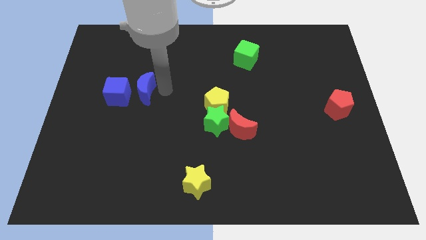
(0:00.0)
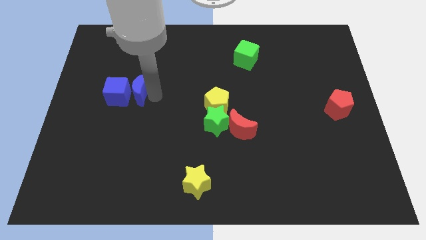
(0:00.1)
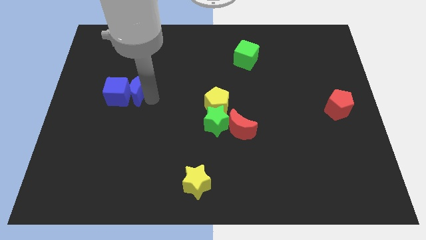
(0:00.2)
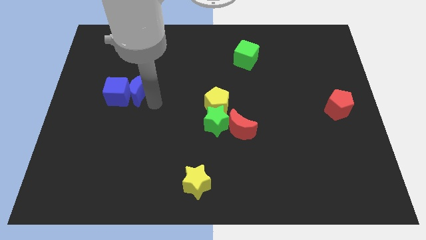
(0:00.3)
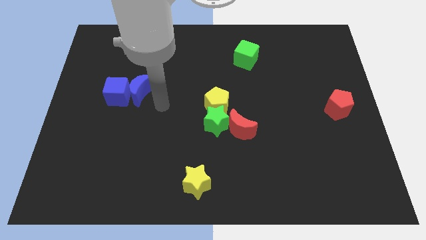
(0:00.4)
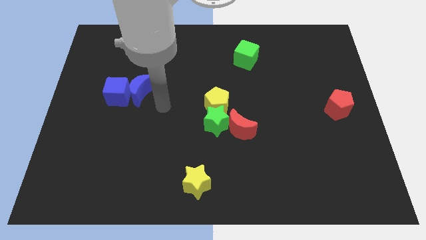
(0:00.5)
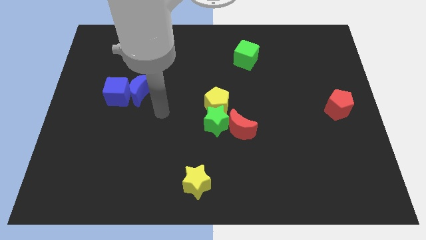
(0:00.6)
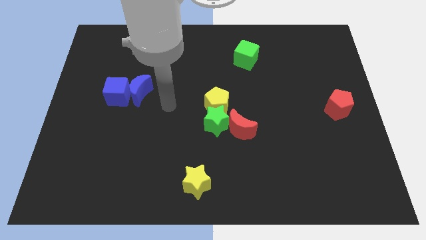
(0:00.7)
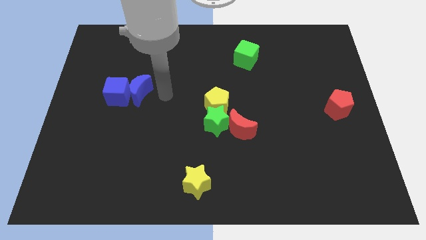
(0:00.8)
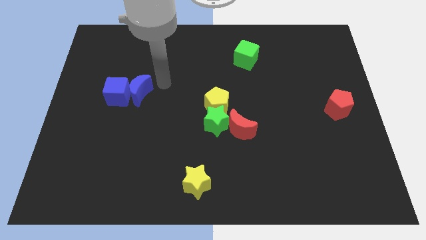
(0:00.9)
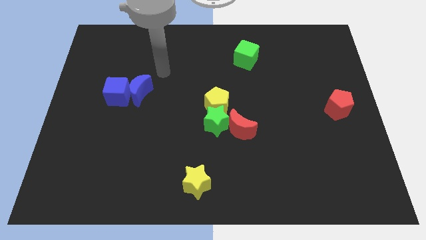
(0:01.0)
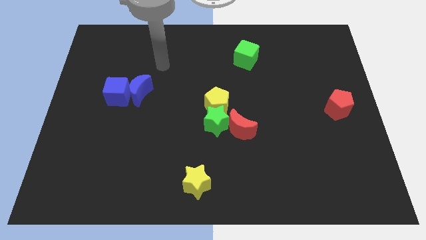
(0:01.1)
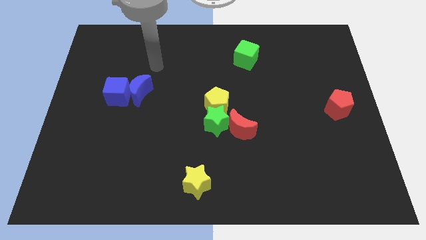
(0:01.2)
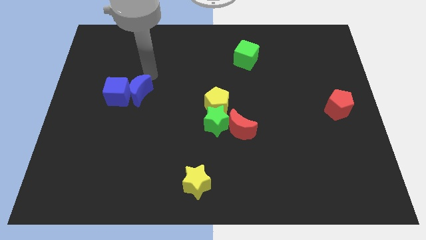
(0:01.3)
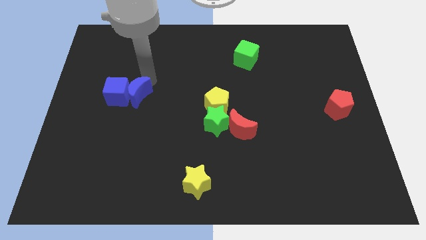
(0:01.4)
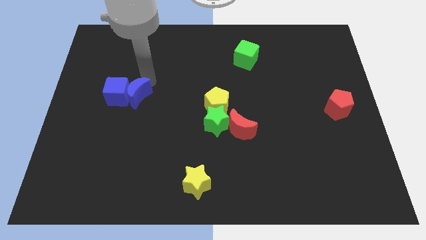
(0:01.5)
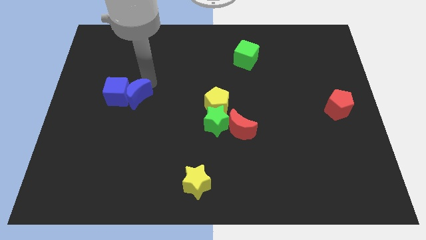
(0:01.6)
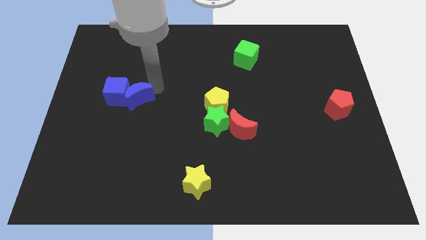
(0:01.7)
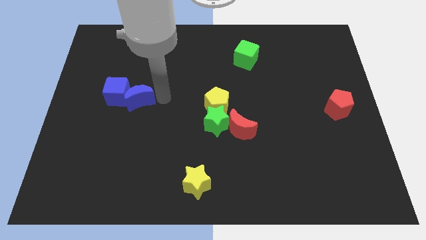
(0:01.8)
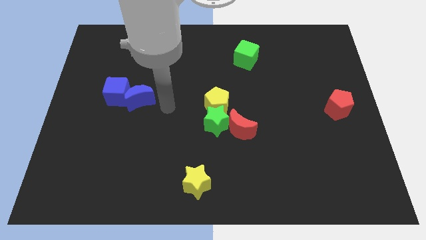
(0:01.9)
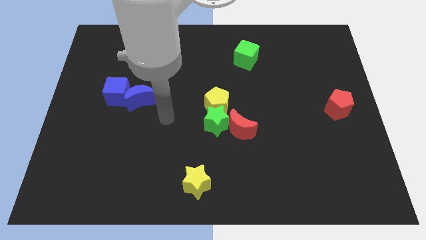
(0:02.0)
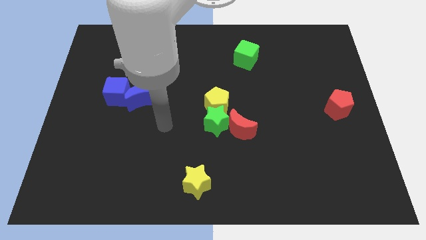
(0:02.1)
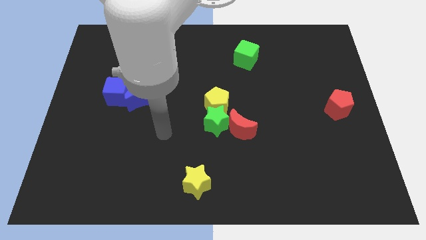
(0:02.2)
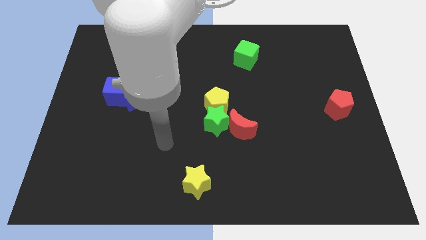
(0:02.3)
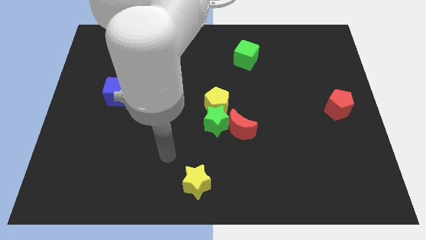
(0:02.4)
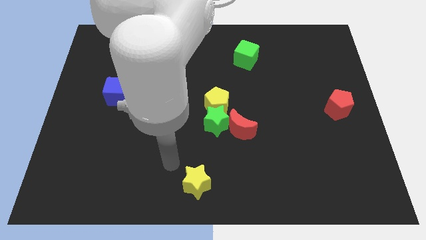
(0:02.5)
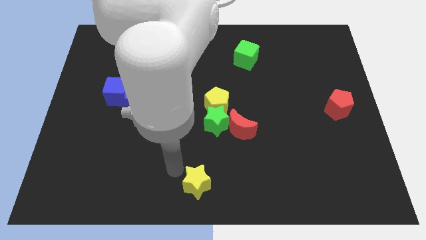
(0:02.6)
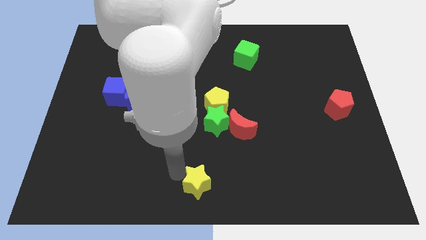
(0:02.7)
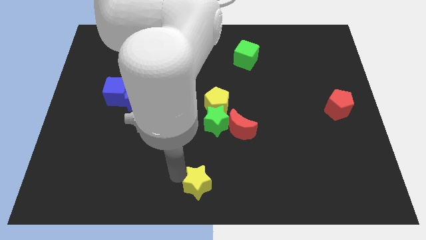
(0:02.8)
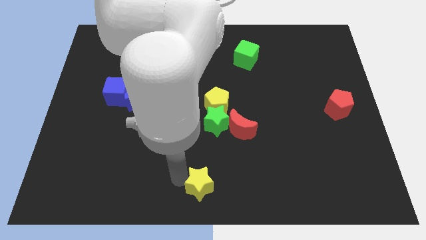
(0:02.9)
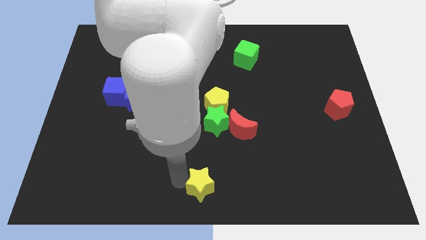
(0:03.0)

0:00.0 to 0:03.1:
place your hand away from the blue moon

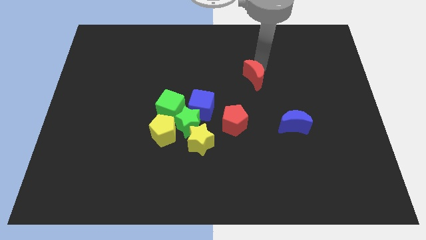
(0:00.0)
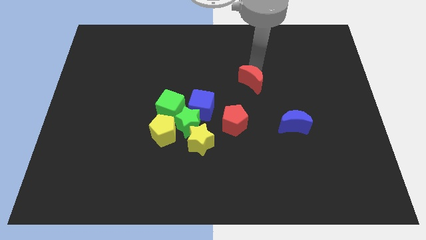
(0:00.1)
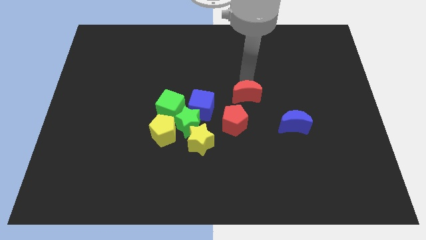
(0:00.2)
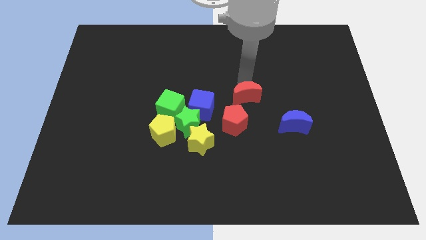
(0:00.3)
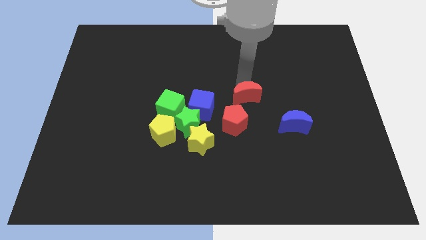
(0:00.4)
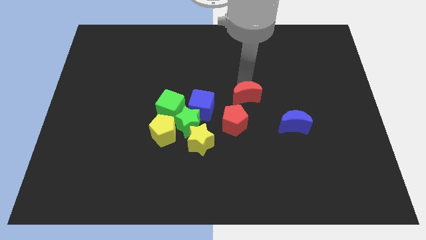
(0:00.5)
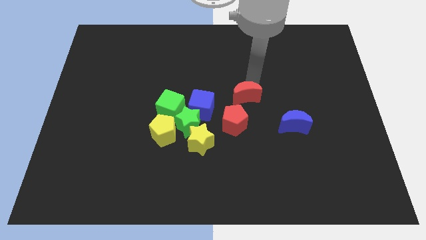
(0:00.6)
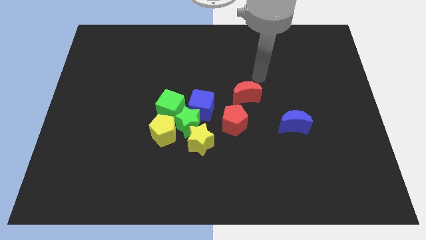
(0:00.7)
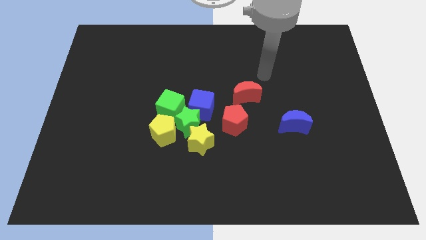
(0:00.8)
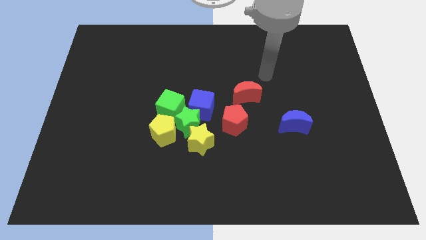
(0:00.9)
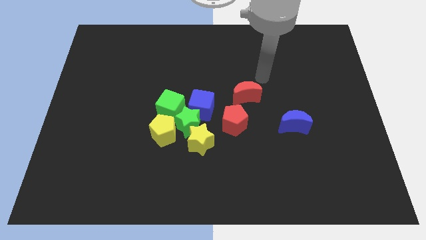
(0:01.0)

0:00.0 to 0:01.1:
place the red crescent above the red pentagon

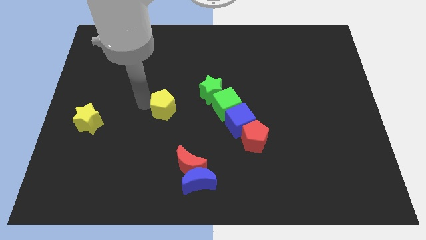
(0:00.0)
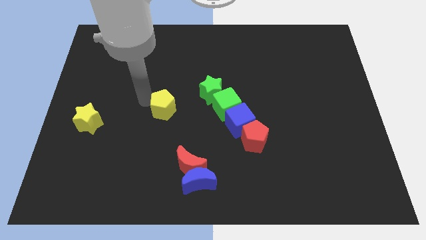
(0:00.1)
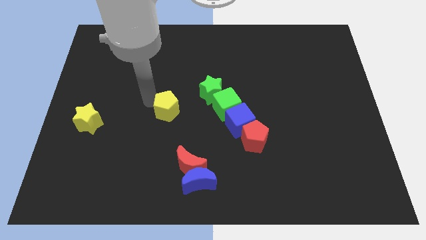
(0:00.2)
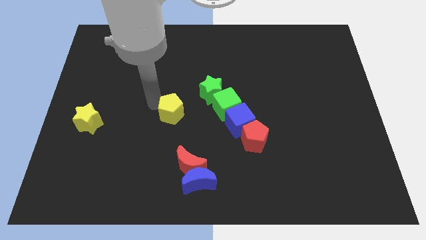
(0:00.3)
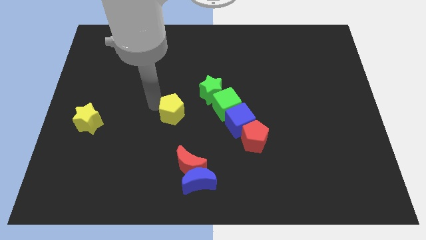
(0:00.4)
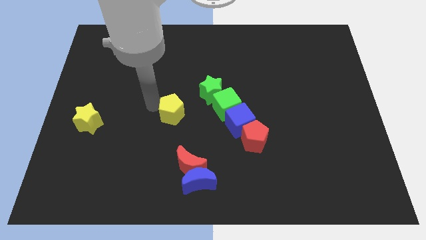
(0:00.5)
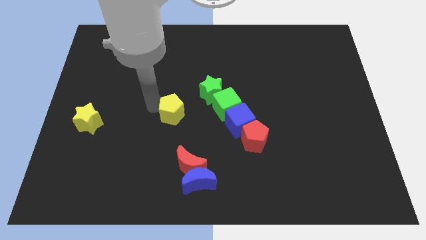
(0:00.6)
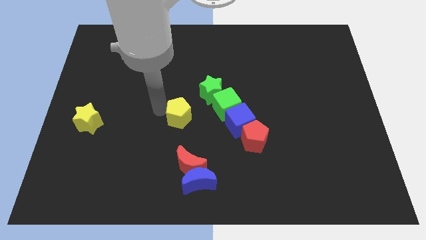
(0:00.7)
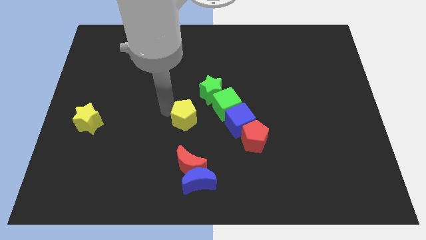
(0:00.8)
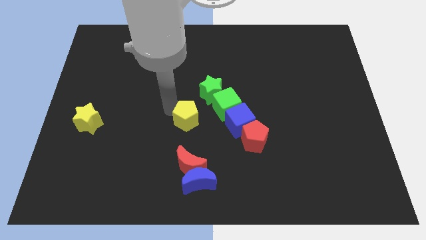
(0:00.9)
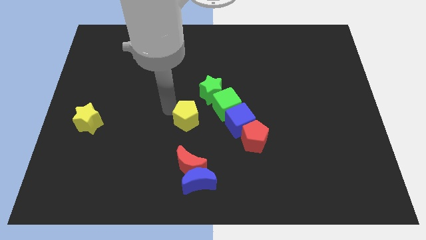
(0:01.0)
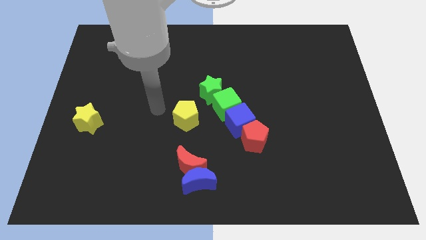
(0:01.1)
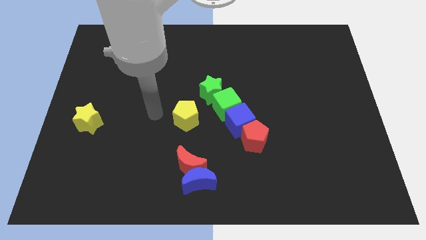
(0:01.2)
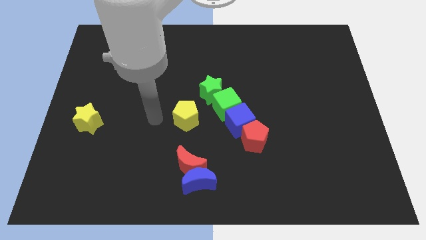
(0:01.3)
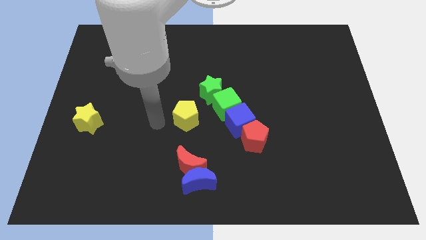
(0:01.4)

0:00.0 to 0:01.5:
place the yellow pentagon left to the green cube

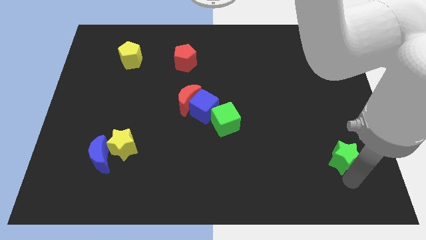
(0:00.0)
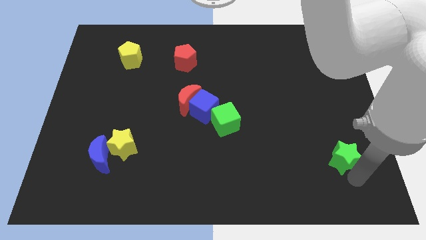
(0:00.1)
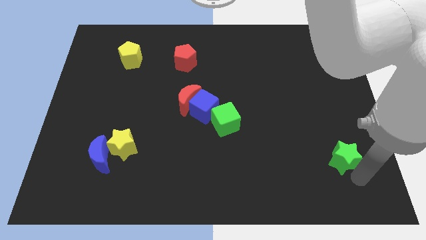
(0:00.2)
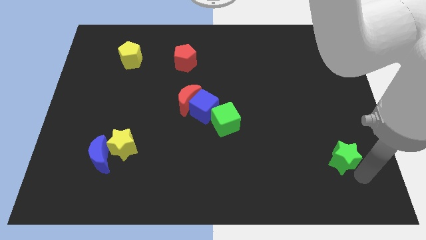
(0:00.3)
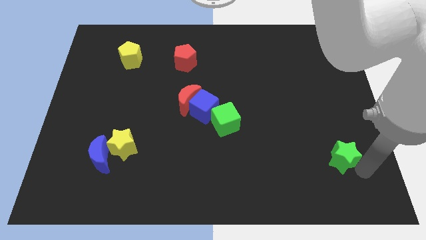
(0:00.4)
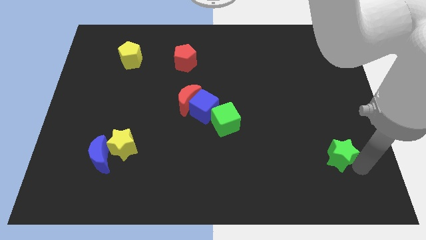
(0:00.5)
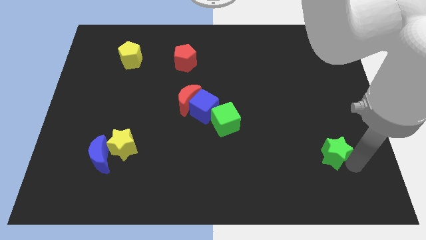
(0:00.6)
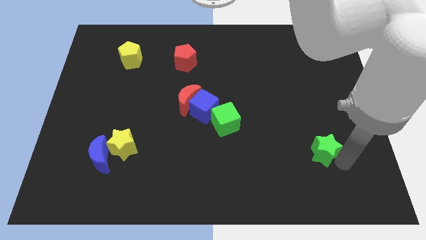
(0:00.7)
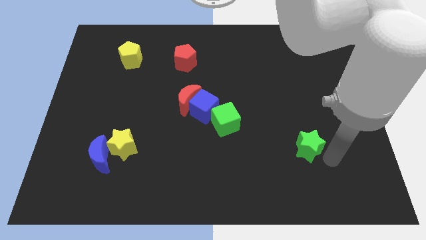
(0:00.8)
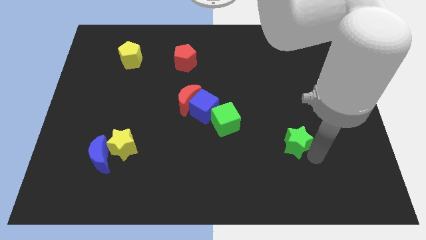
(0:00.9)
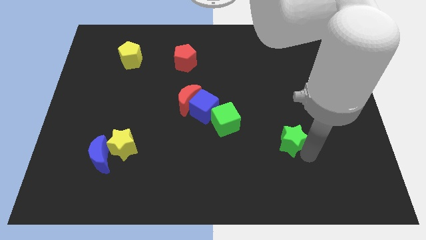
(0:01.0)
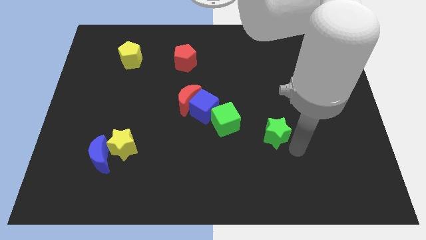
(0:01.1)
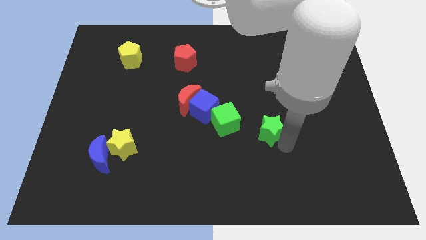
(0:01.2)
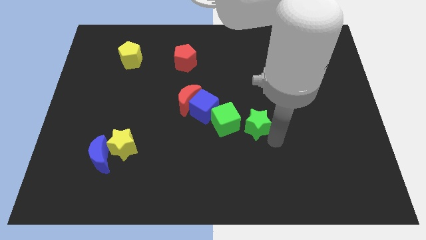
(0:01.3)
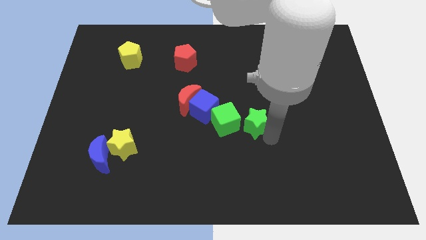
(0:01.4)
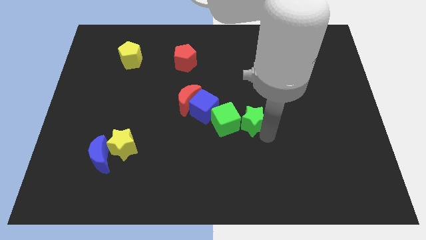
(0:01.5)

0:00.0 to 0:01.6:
put the green star to the right side of the green cube

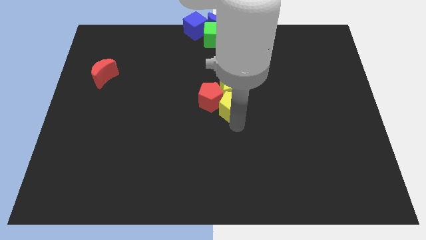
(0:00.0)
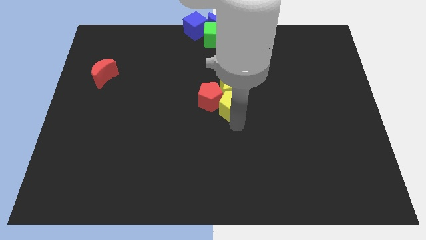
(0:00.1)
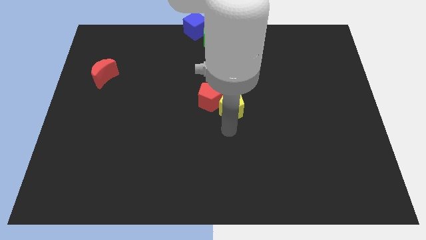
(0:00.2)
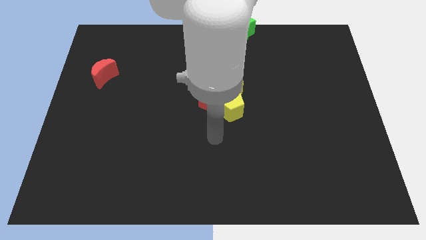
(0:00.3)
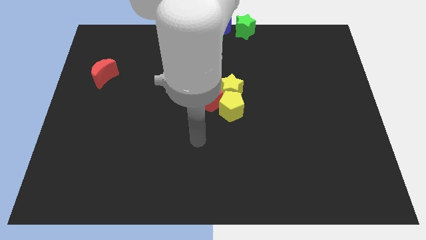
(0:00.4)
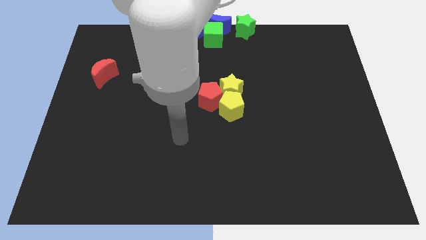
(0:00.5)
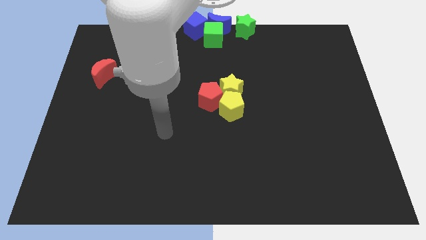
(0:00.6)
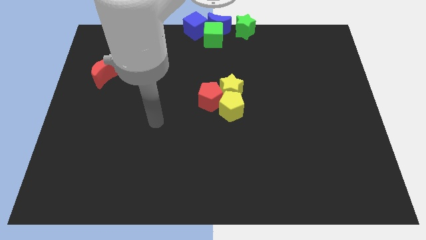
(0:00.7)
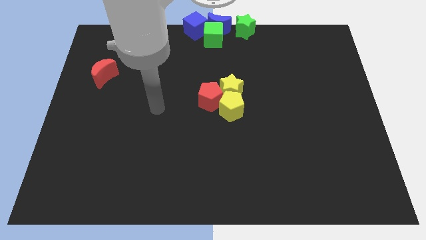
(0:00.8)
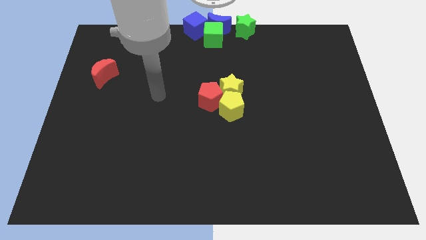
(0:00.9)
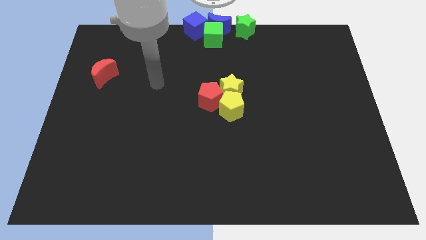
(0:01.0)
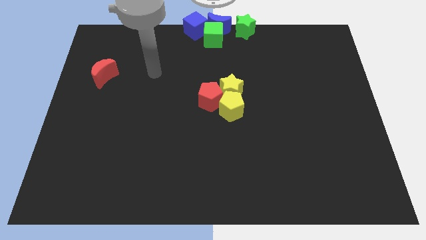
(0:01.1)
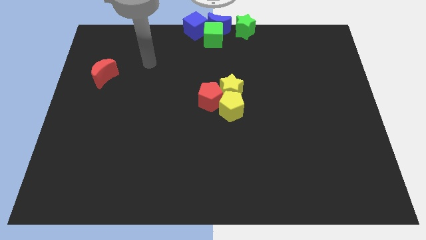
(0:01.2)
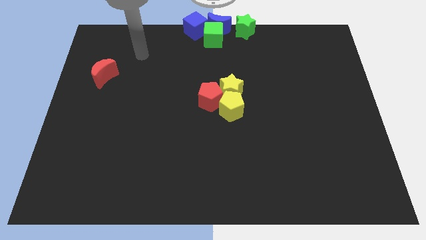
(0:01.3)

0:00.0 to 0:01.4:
move arm from yellow pentagon

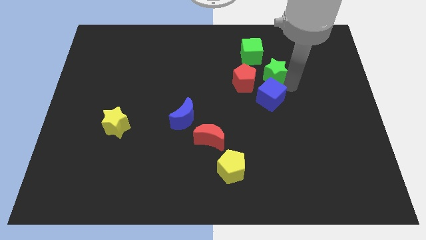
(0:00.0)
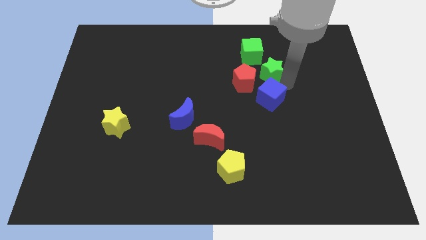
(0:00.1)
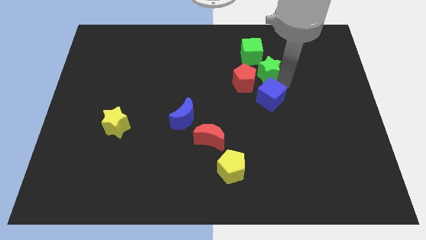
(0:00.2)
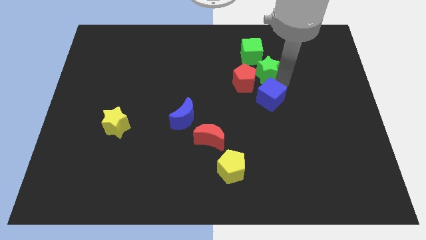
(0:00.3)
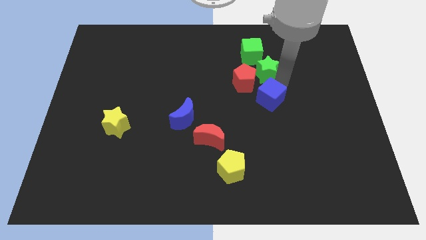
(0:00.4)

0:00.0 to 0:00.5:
push the green star below the green cube
